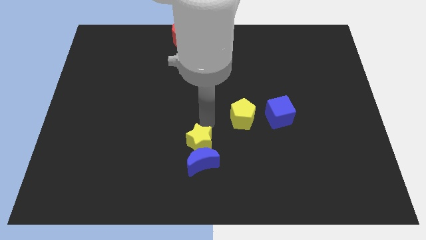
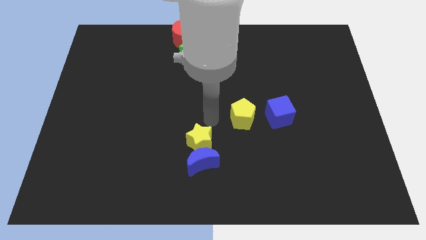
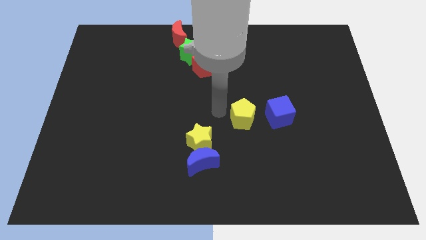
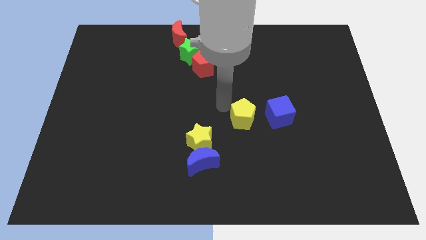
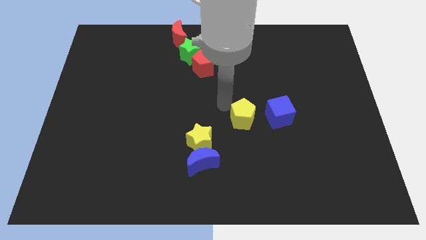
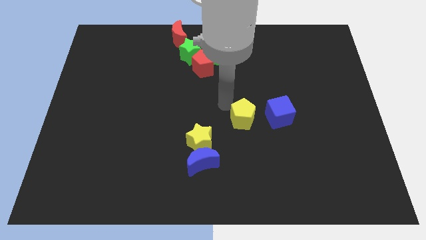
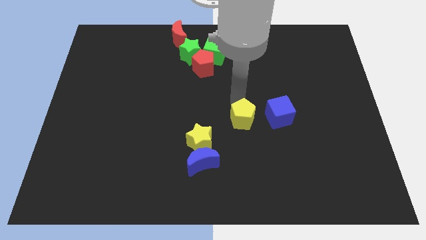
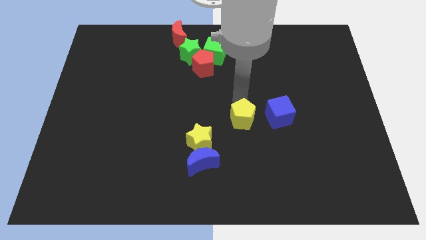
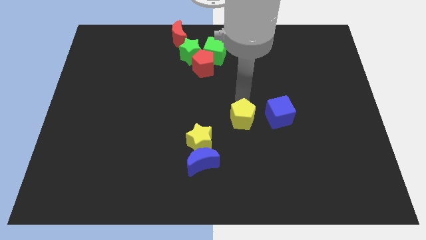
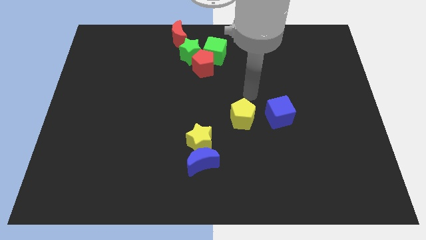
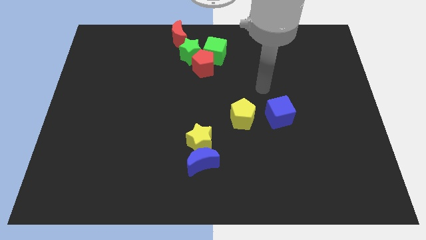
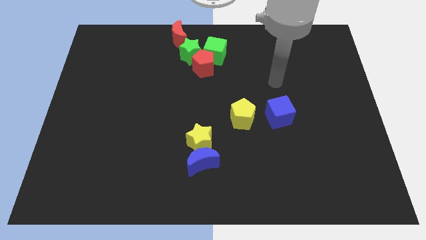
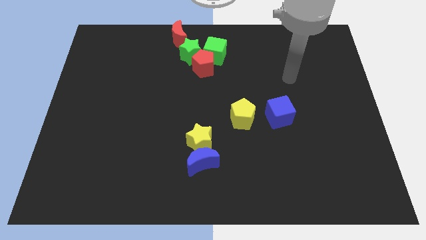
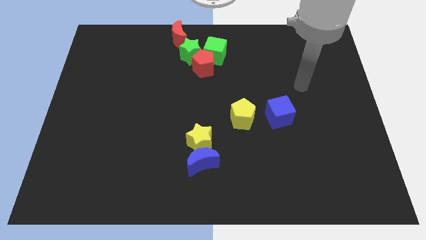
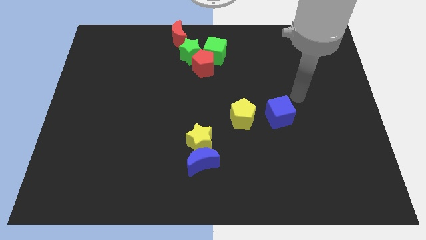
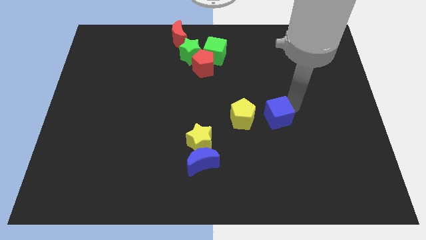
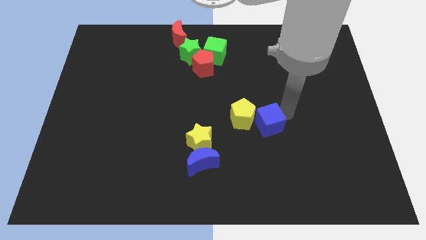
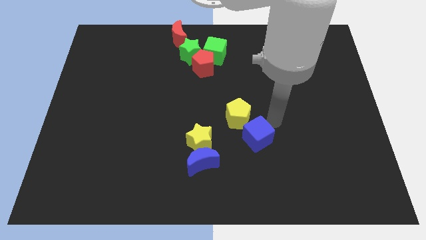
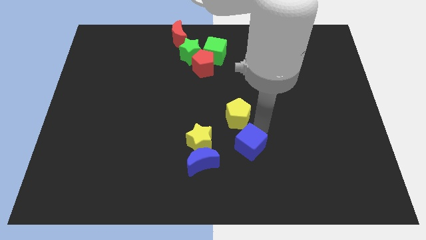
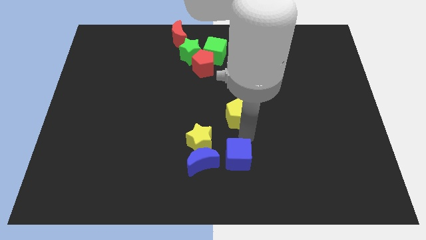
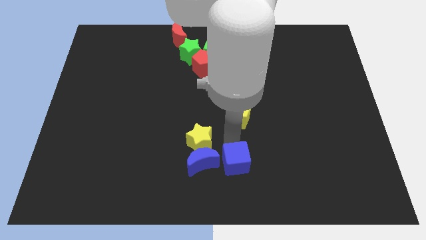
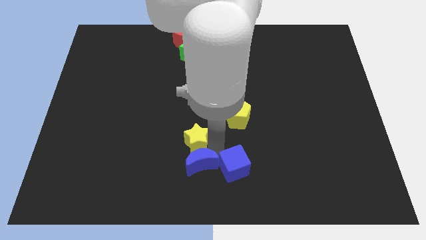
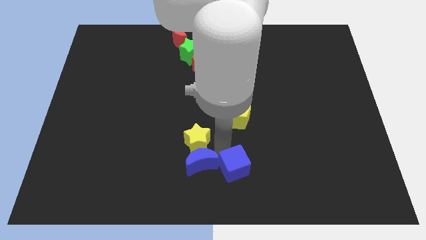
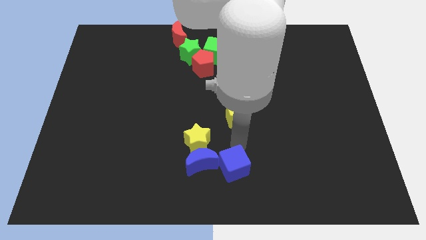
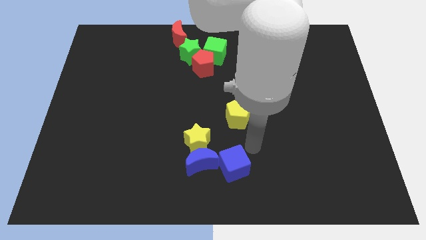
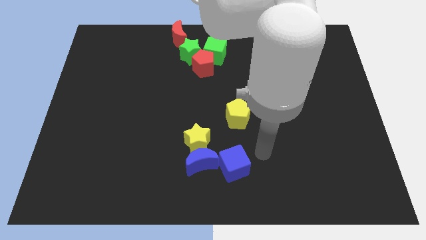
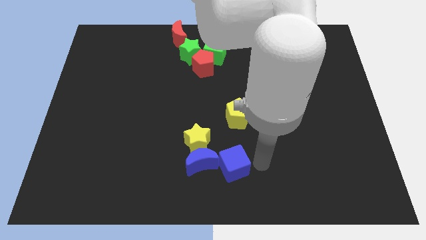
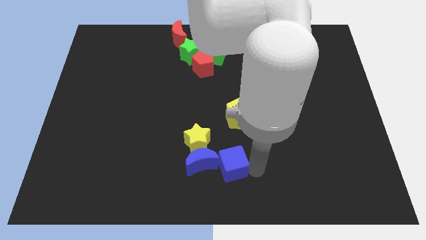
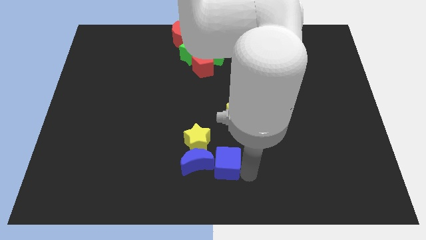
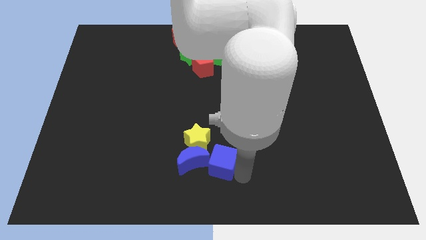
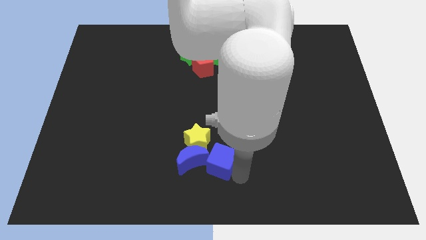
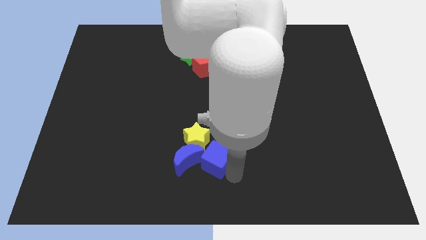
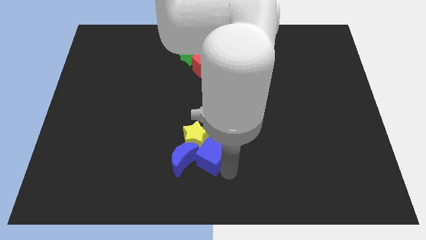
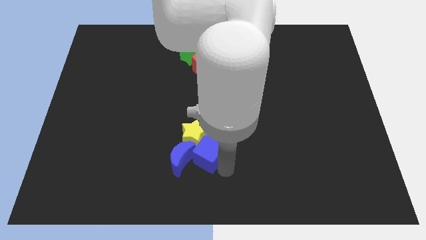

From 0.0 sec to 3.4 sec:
push the blue cube to the right of the blue crescent

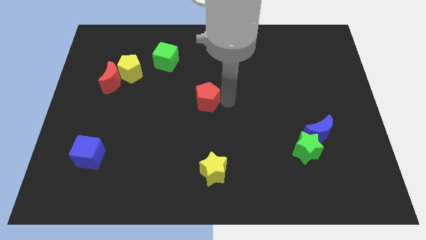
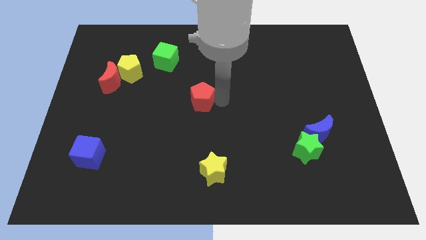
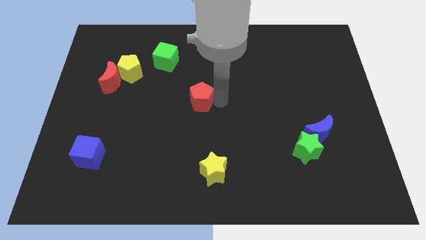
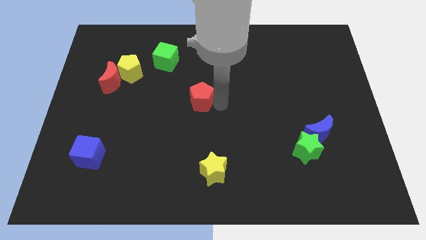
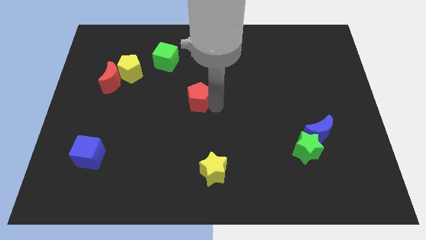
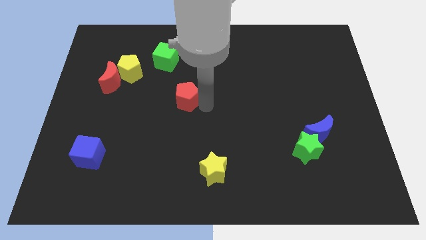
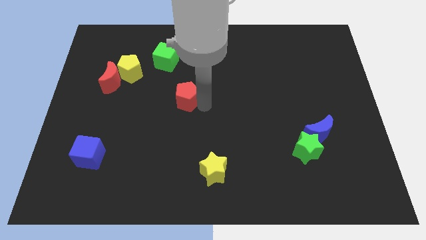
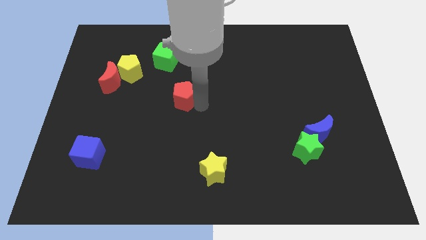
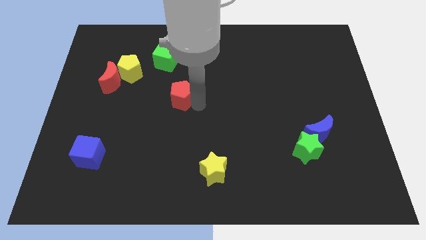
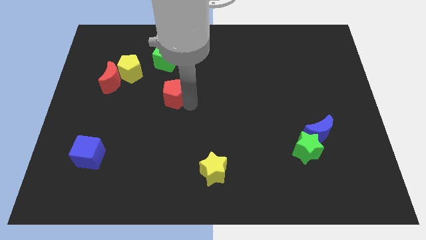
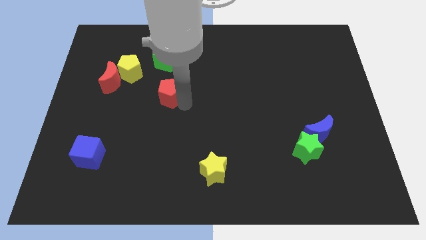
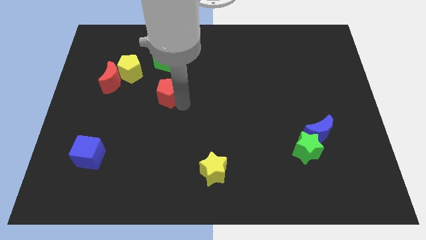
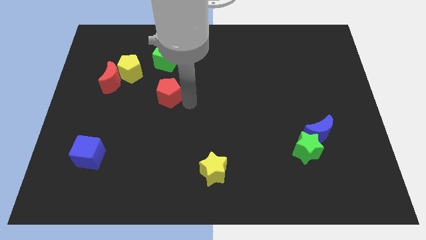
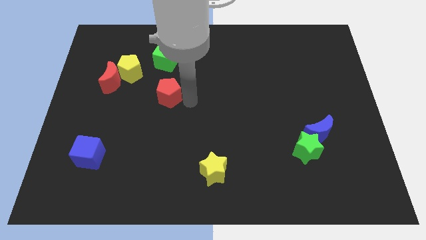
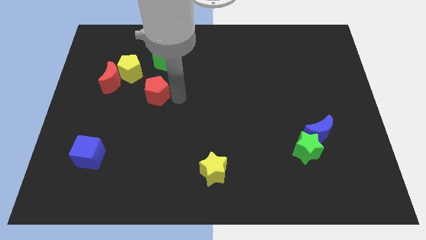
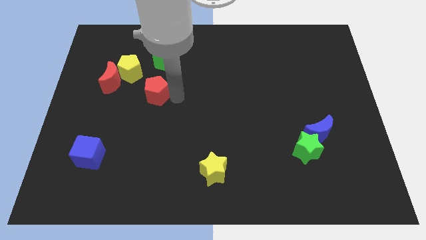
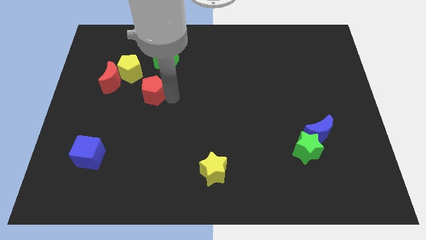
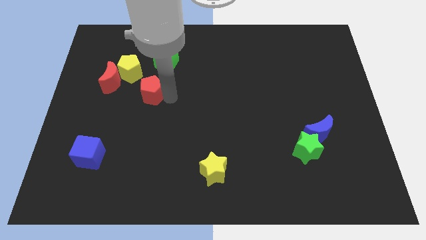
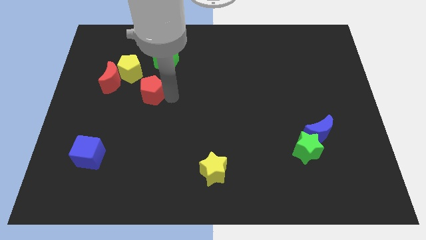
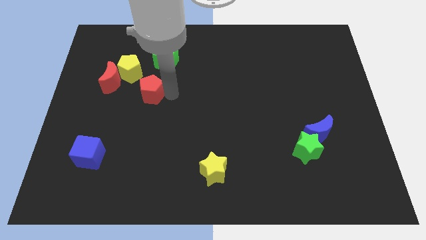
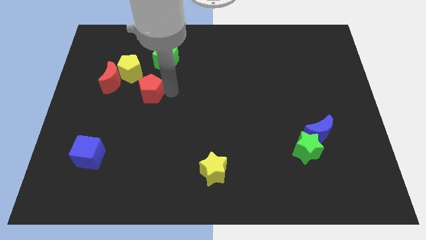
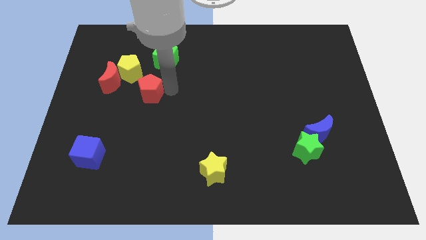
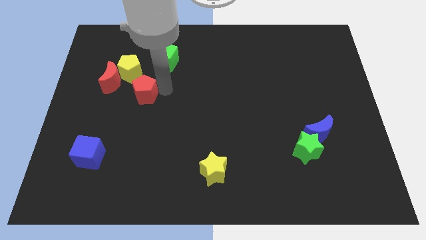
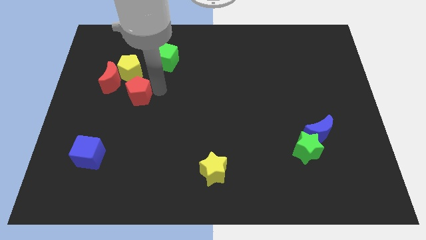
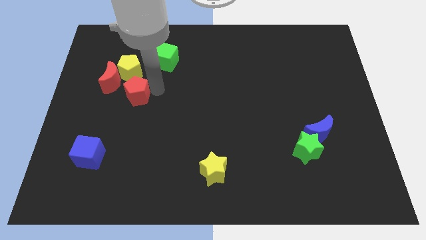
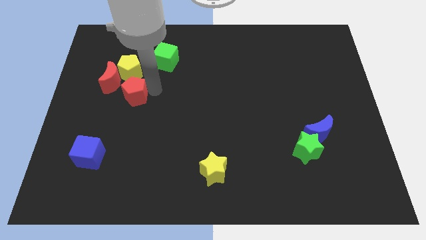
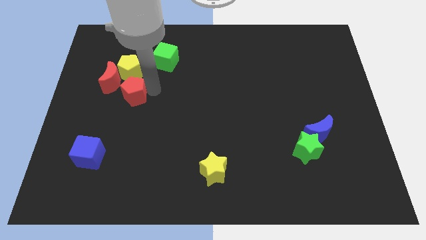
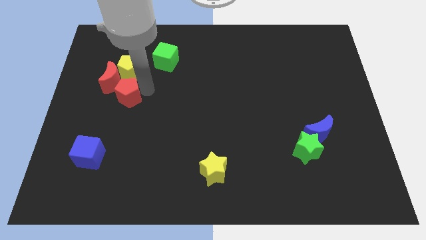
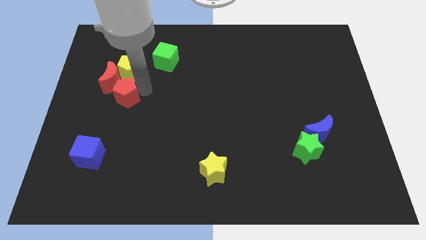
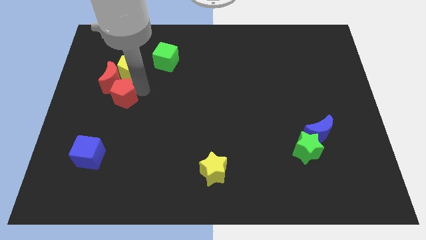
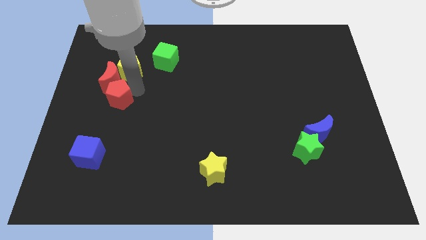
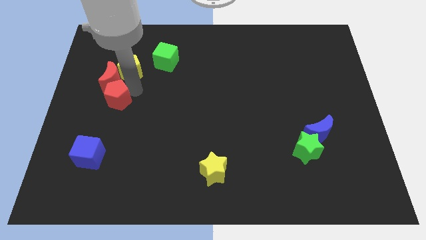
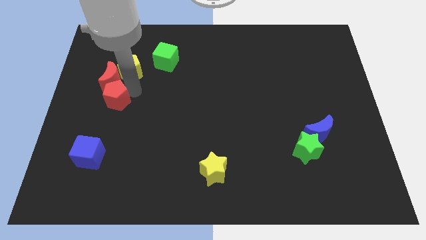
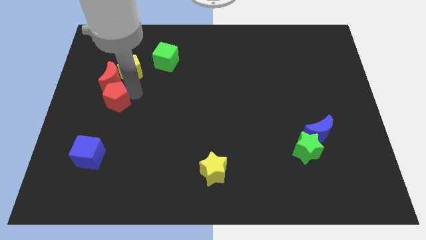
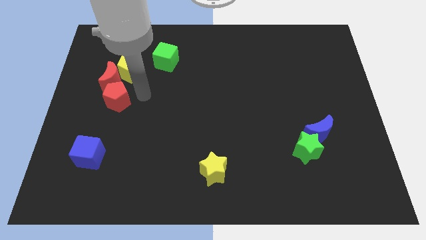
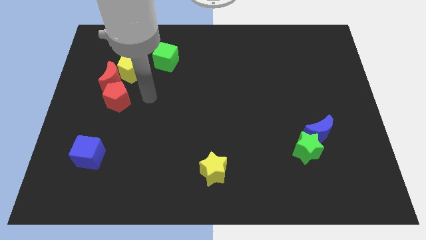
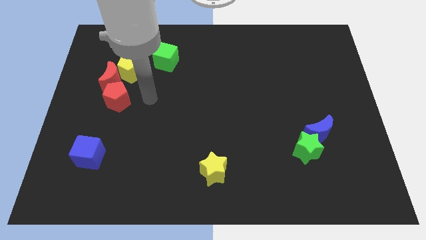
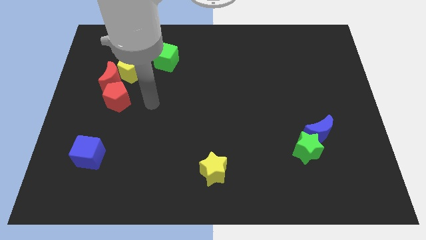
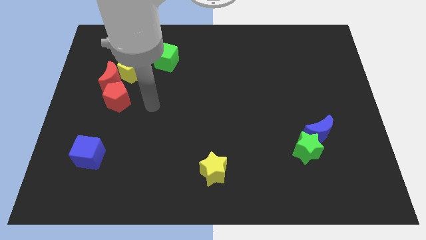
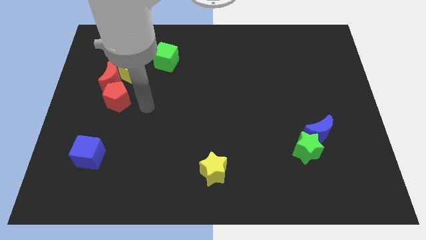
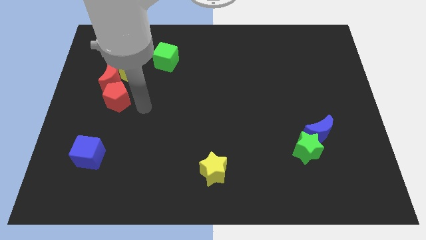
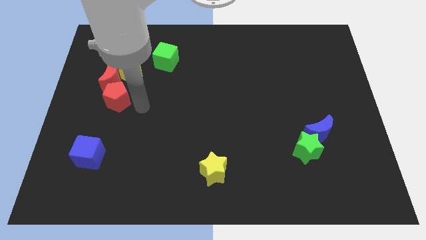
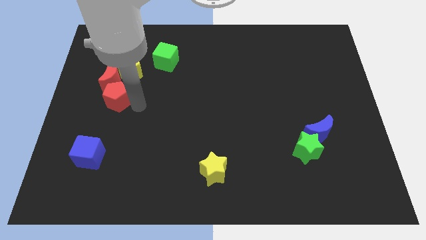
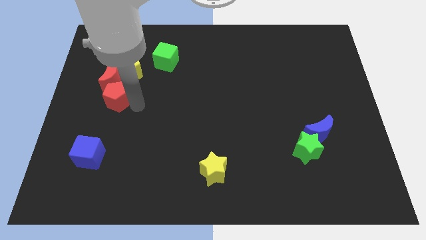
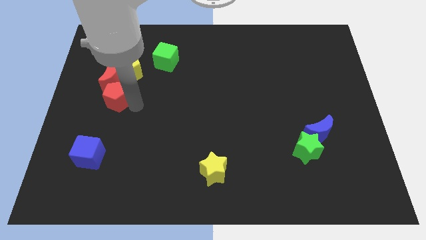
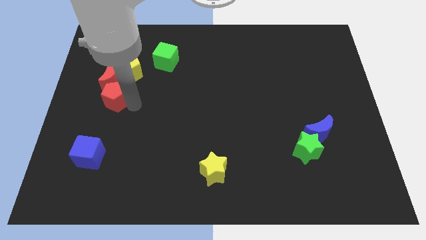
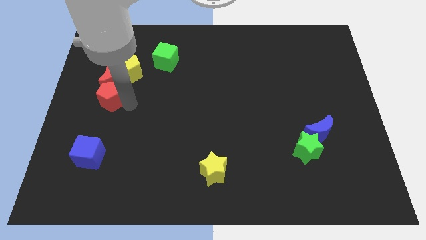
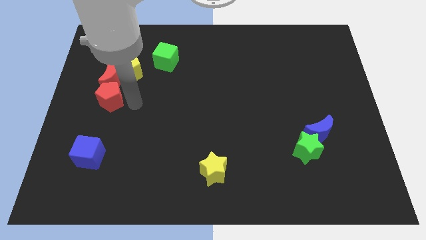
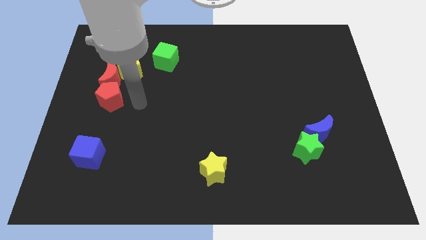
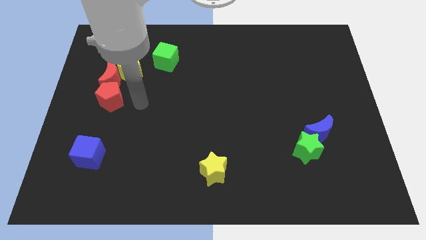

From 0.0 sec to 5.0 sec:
push the red pentagon to the bottom of the red crescent

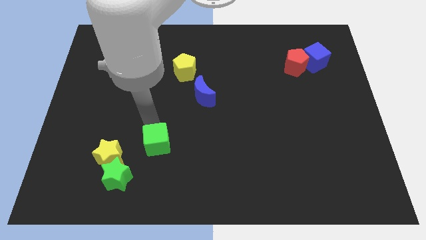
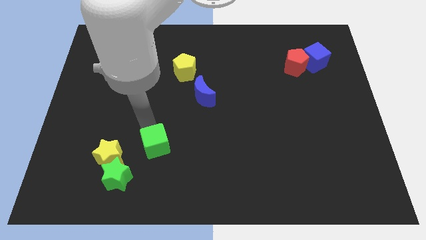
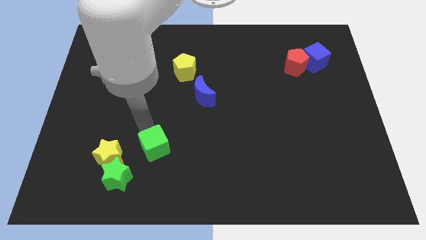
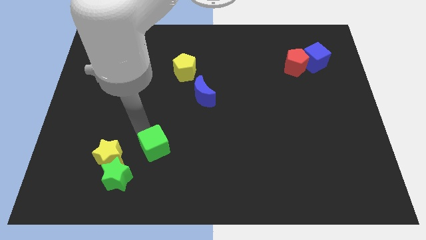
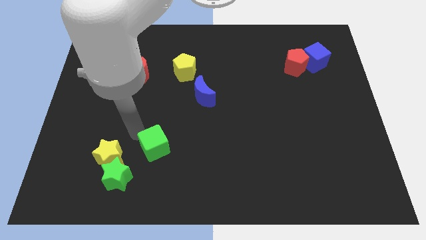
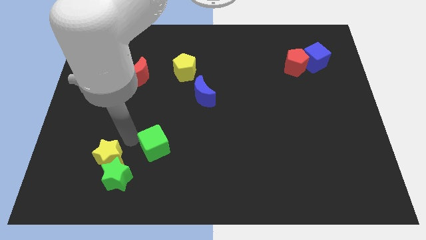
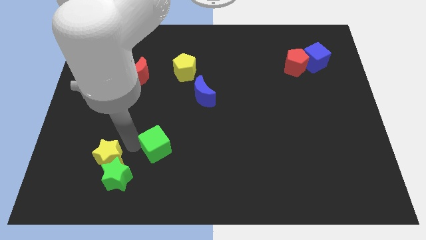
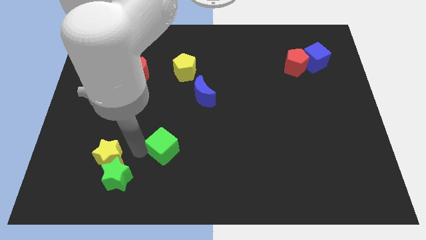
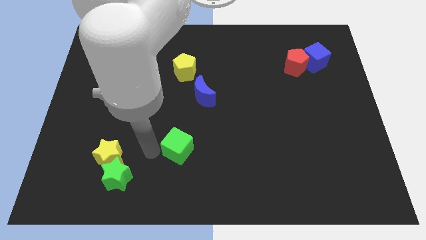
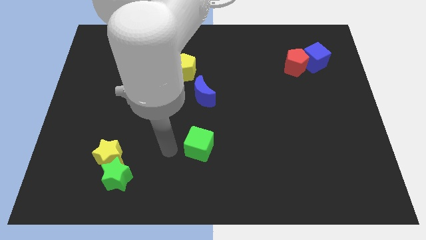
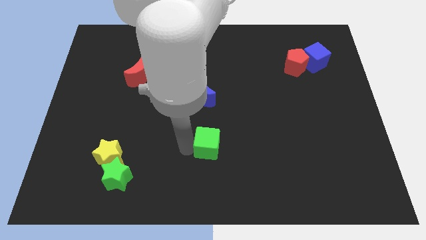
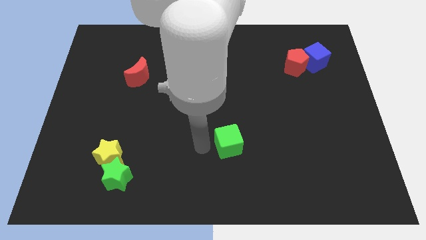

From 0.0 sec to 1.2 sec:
move the green cube slightly right
